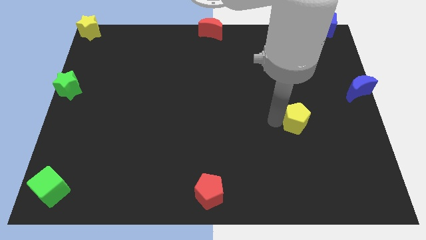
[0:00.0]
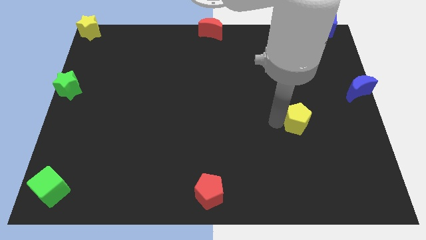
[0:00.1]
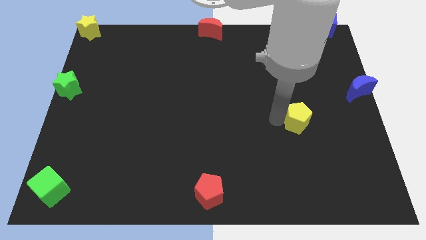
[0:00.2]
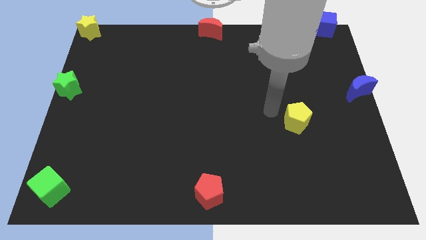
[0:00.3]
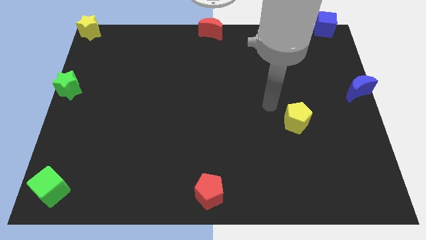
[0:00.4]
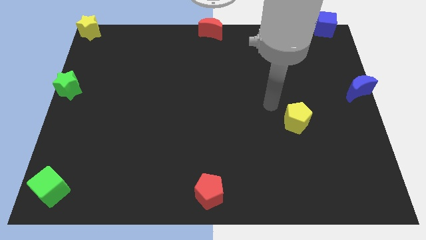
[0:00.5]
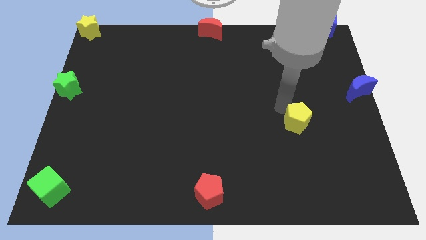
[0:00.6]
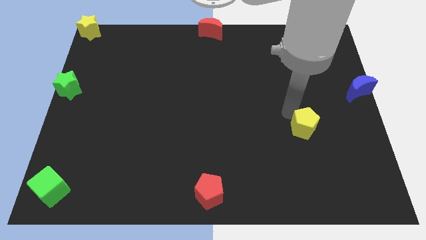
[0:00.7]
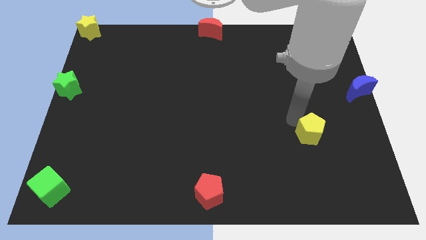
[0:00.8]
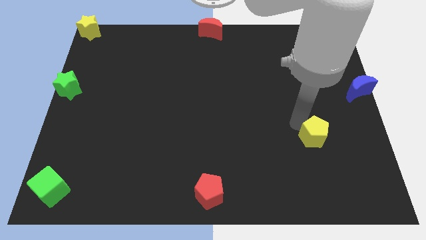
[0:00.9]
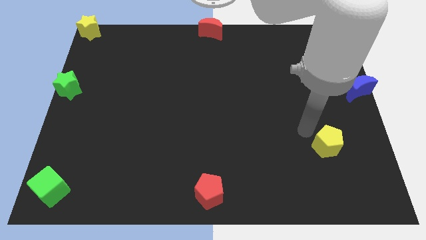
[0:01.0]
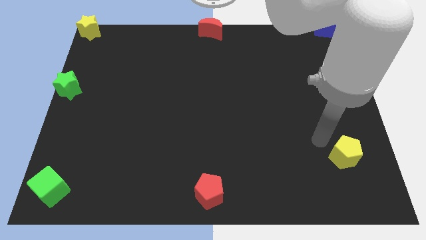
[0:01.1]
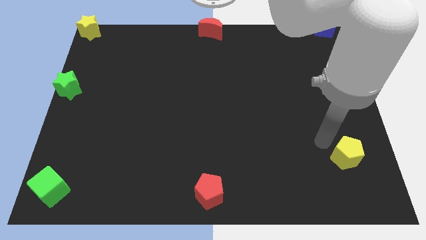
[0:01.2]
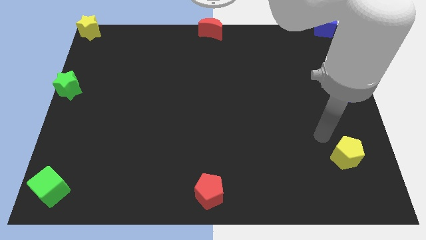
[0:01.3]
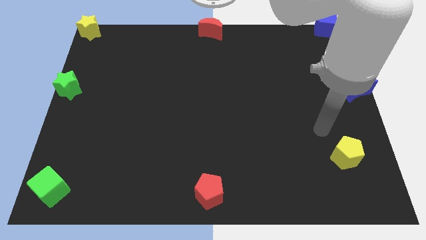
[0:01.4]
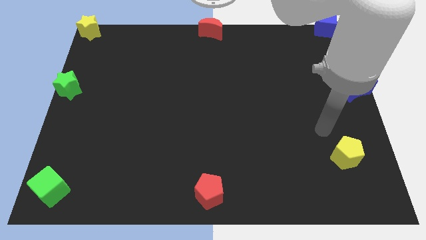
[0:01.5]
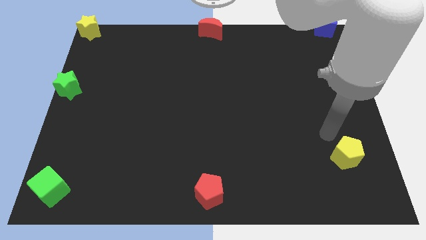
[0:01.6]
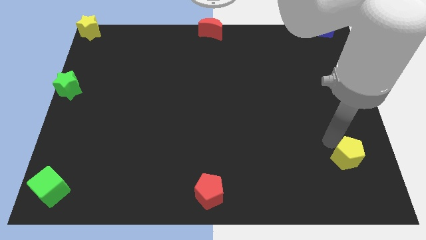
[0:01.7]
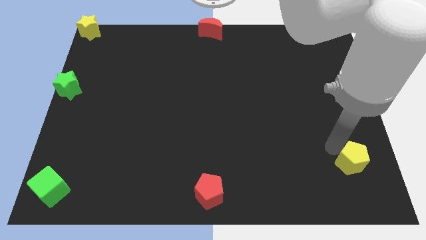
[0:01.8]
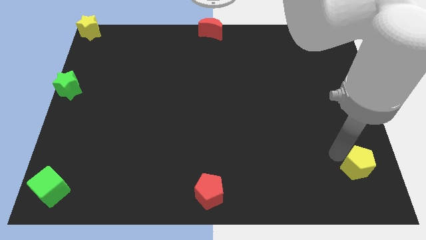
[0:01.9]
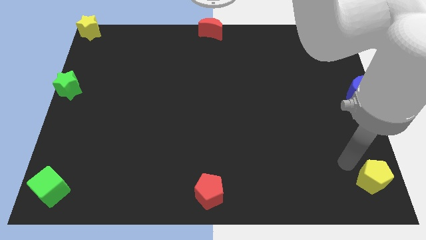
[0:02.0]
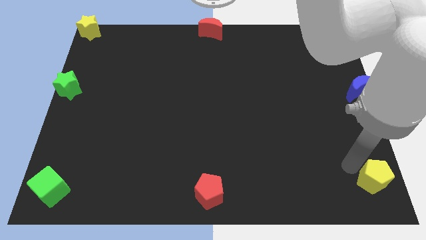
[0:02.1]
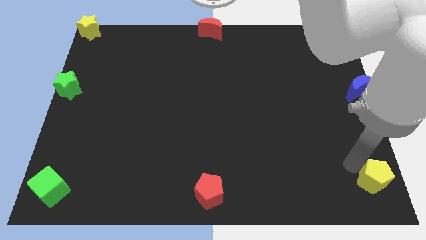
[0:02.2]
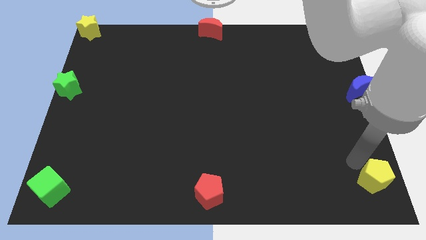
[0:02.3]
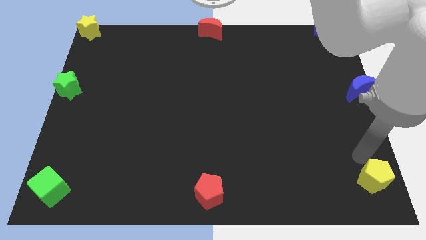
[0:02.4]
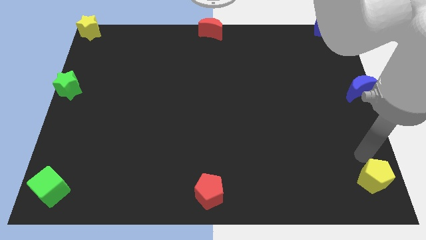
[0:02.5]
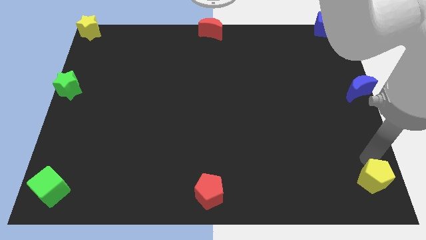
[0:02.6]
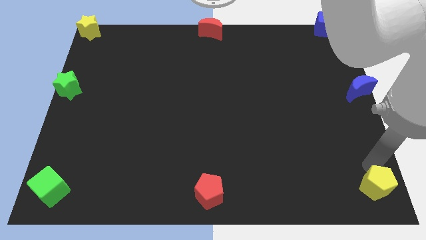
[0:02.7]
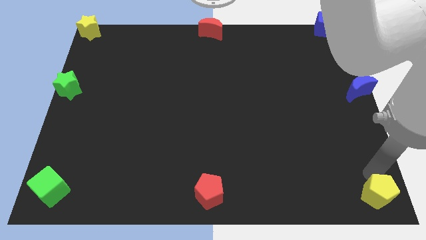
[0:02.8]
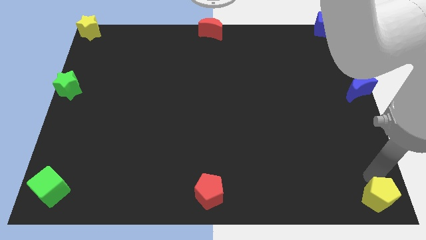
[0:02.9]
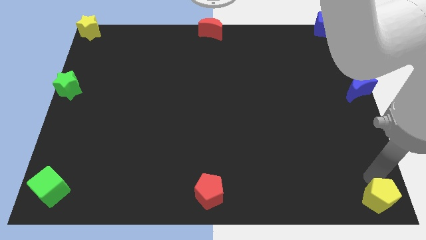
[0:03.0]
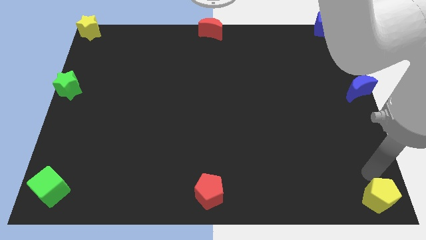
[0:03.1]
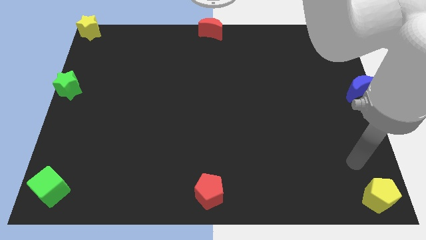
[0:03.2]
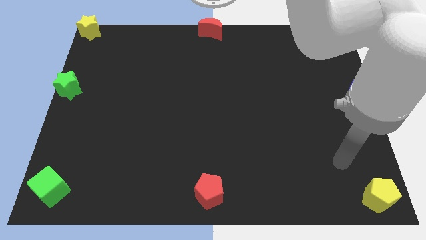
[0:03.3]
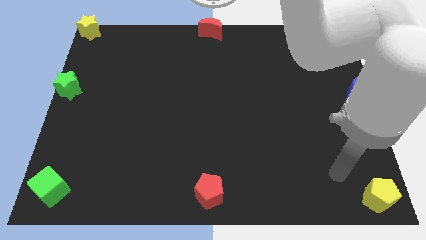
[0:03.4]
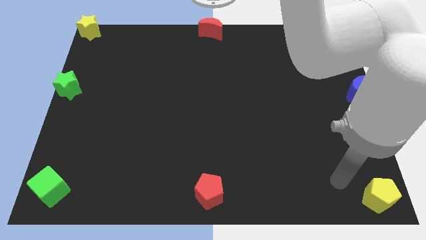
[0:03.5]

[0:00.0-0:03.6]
push the yellow pentagon to the bottom right of the board

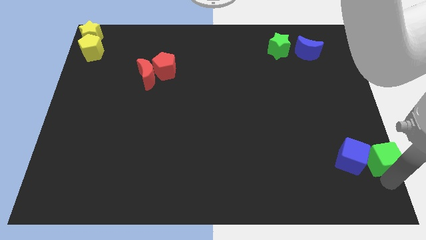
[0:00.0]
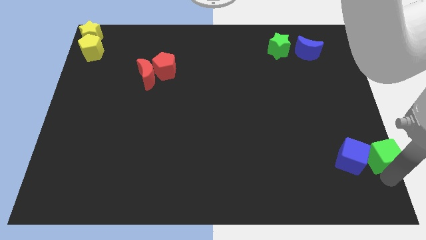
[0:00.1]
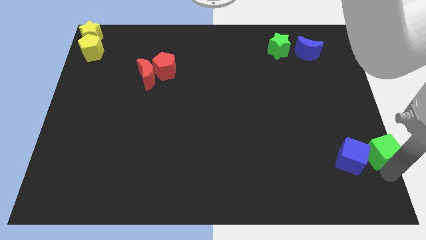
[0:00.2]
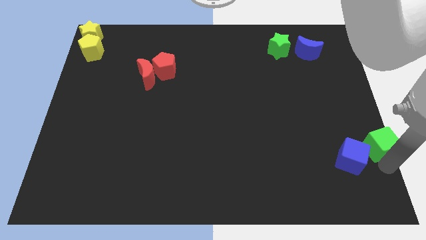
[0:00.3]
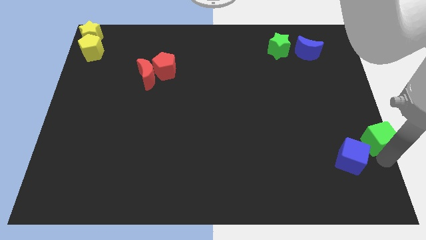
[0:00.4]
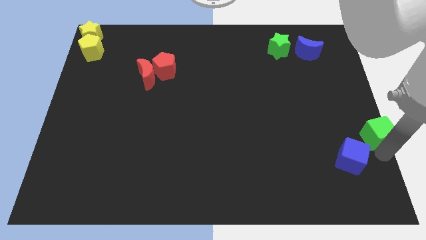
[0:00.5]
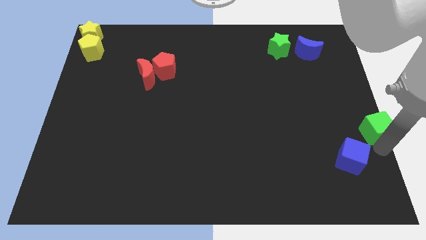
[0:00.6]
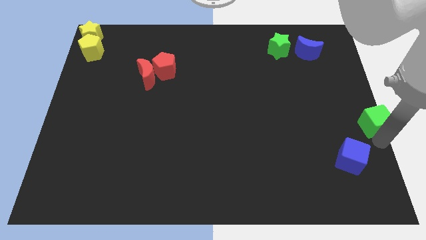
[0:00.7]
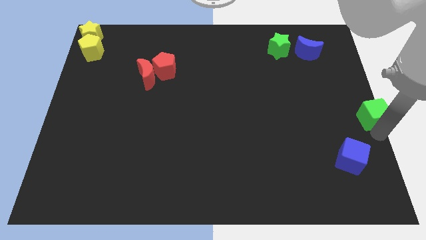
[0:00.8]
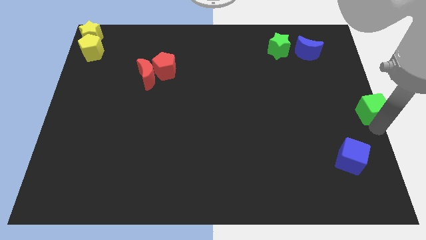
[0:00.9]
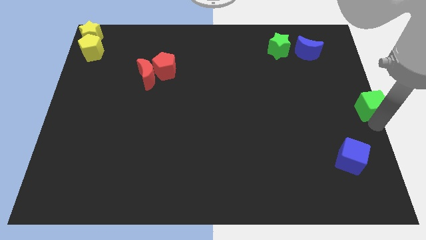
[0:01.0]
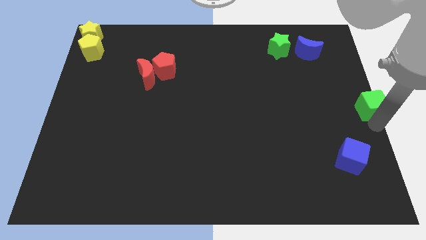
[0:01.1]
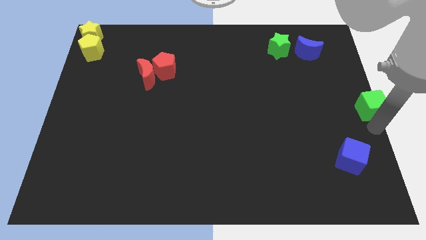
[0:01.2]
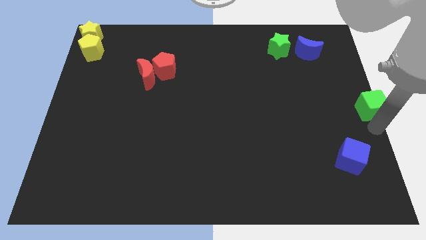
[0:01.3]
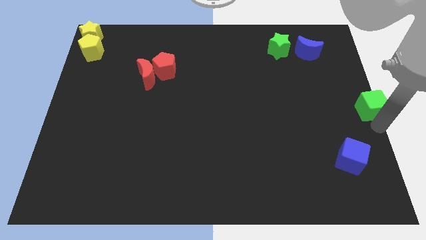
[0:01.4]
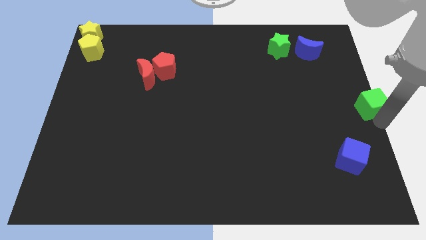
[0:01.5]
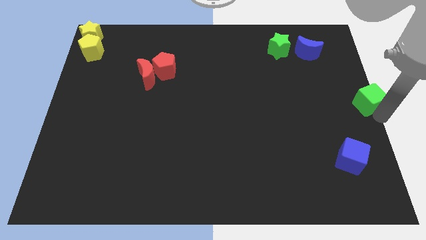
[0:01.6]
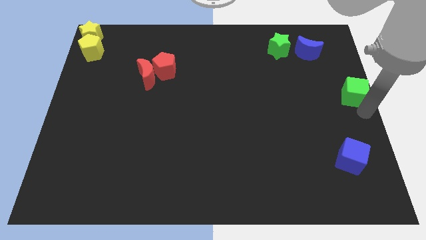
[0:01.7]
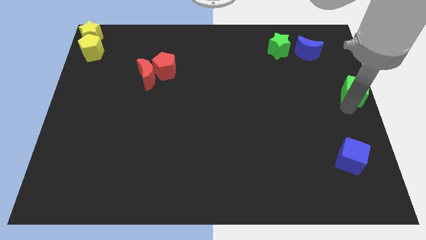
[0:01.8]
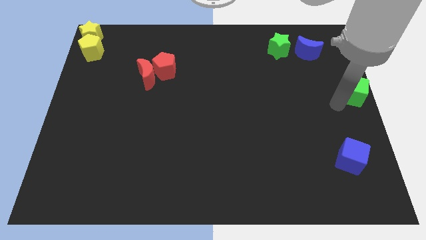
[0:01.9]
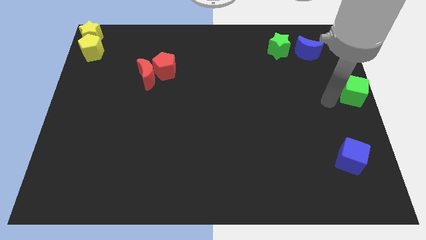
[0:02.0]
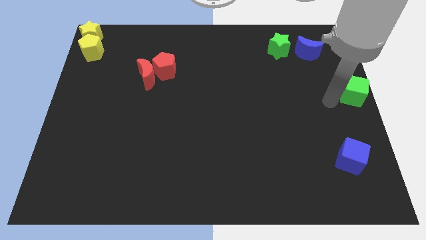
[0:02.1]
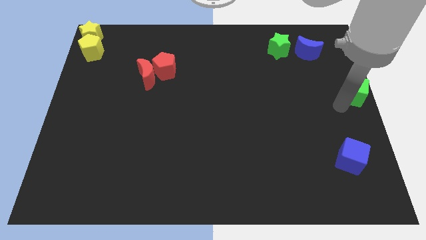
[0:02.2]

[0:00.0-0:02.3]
move the green cube to center right of the board

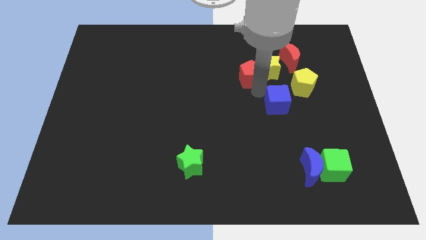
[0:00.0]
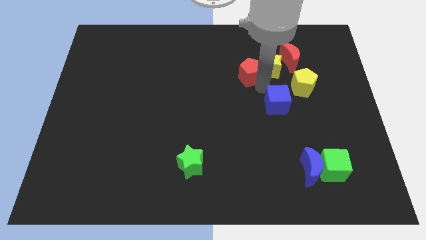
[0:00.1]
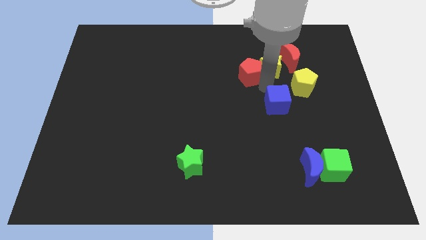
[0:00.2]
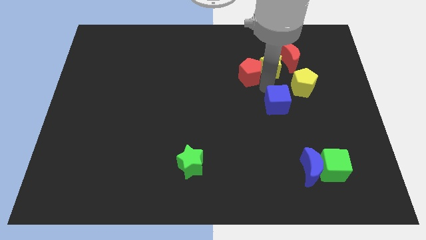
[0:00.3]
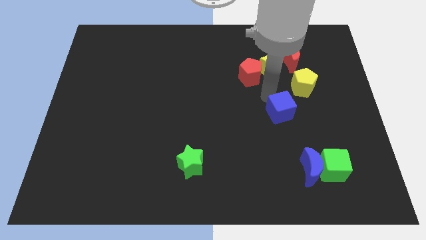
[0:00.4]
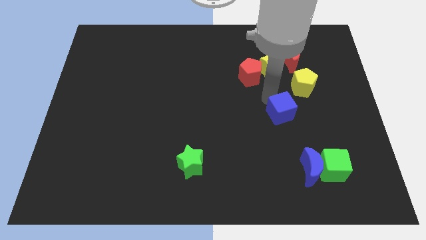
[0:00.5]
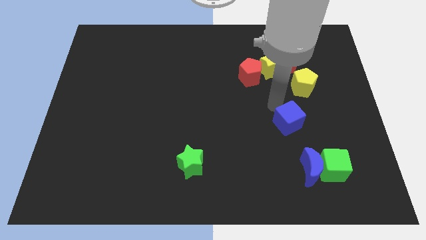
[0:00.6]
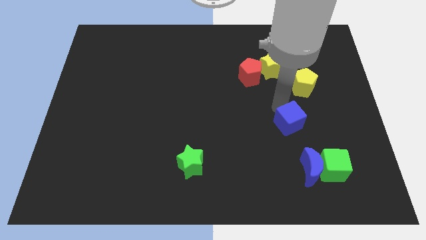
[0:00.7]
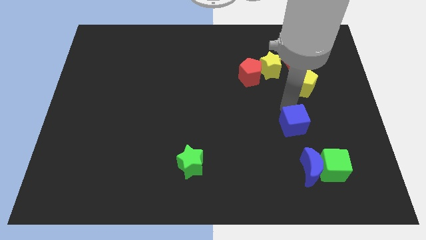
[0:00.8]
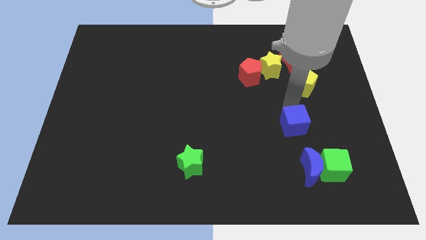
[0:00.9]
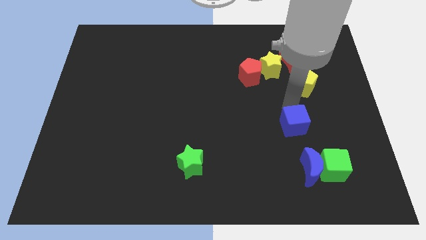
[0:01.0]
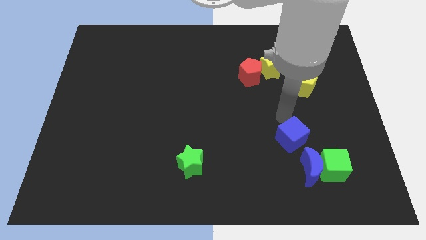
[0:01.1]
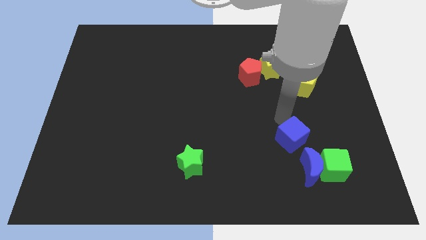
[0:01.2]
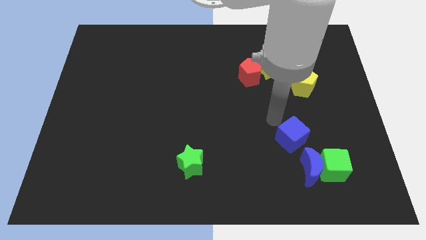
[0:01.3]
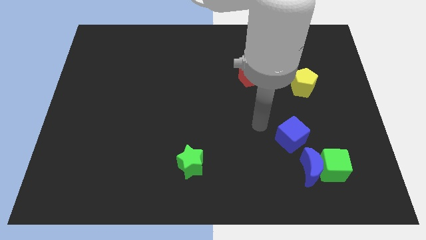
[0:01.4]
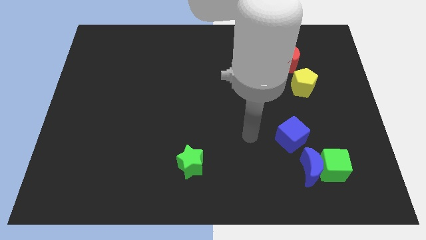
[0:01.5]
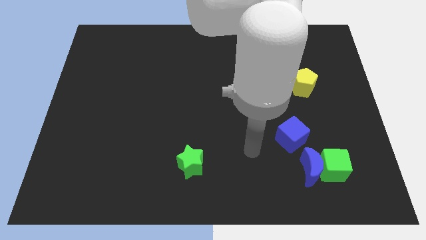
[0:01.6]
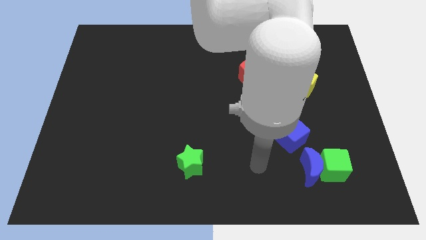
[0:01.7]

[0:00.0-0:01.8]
place the blue cube above the blue moon

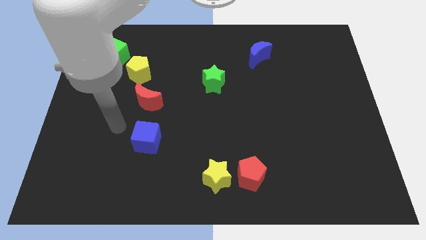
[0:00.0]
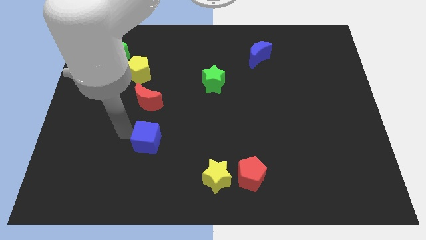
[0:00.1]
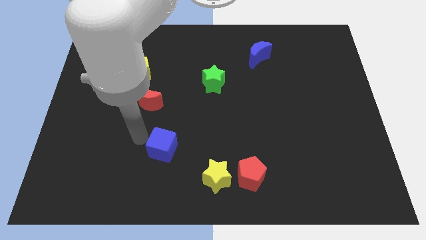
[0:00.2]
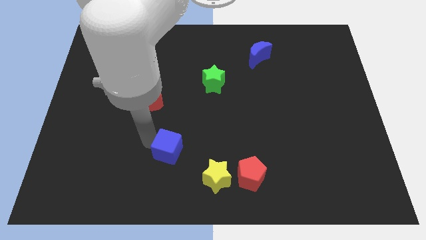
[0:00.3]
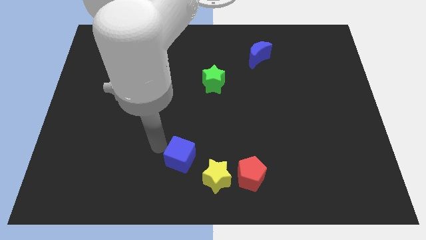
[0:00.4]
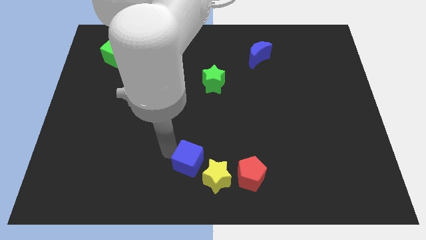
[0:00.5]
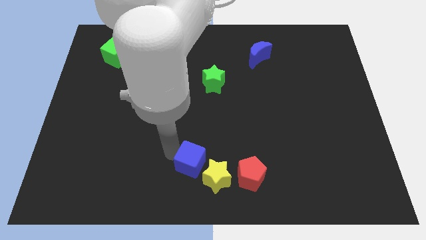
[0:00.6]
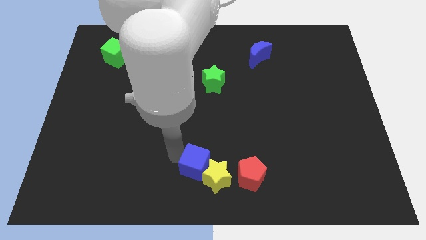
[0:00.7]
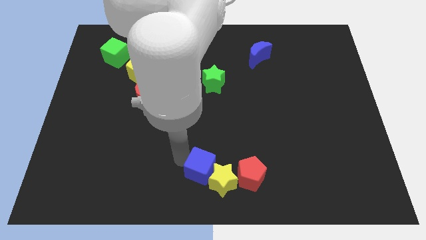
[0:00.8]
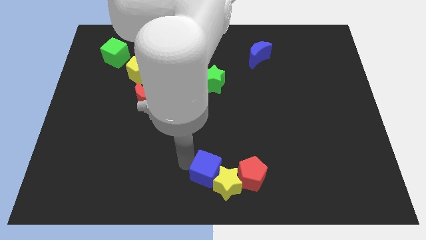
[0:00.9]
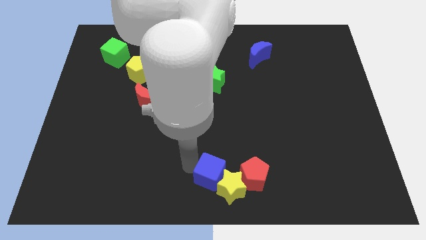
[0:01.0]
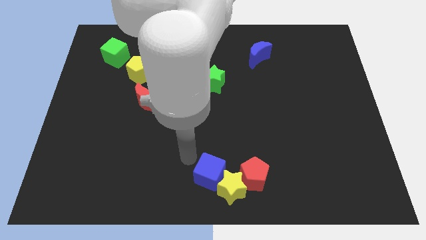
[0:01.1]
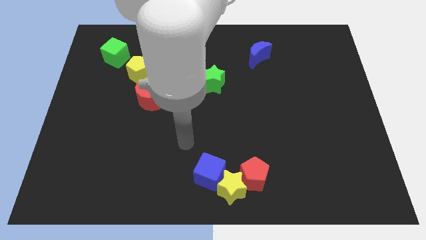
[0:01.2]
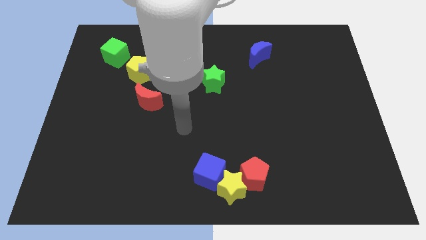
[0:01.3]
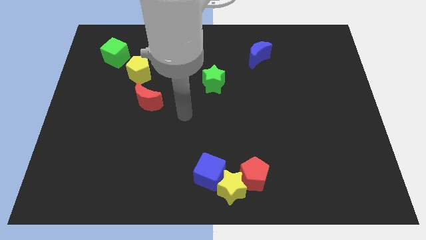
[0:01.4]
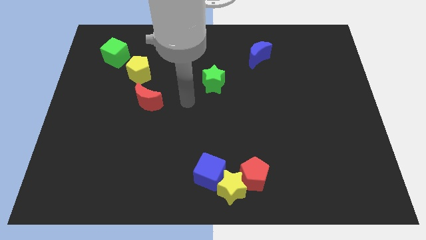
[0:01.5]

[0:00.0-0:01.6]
push the blue cube below the green star
